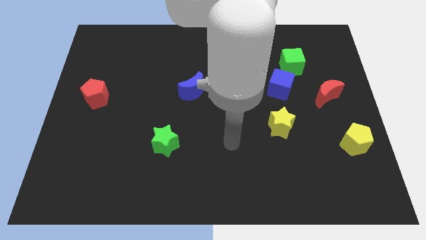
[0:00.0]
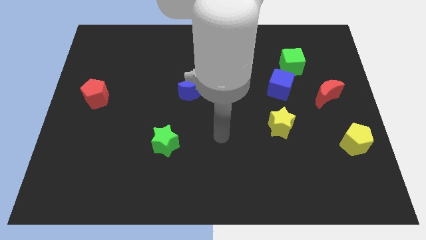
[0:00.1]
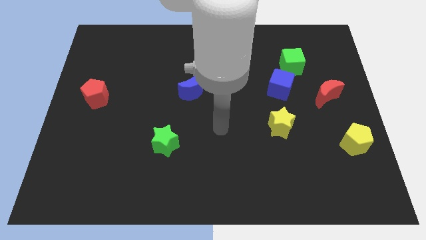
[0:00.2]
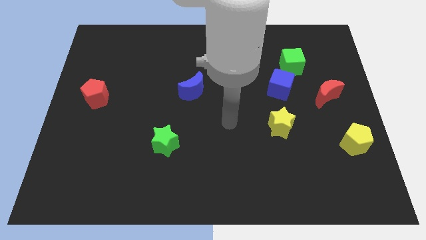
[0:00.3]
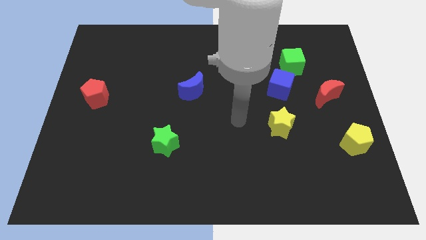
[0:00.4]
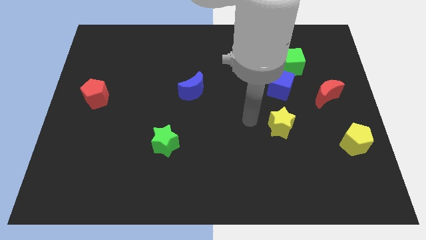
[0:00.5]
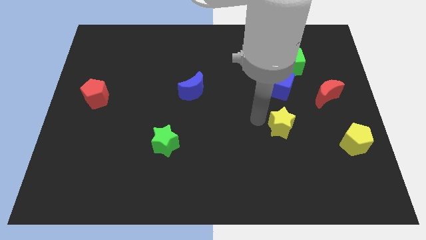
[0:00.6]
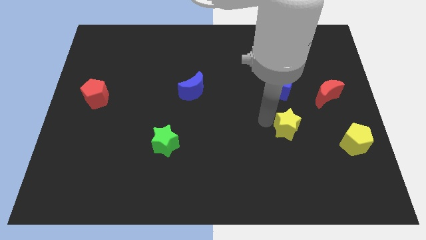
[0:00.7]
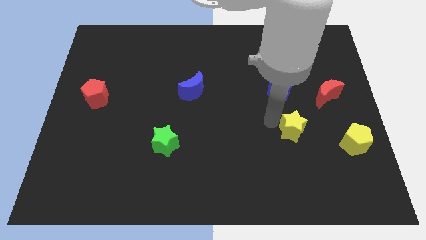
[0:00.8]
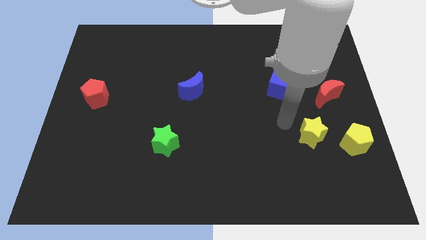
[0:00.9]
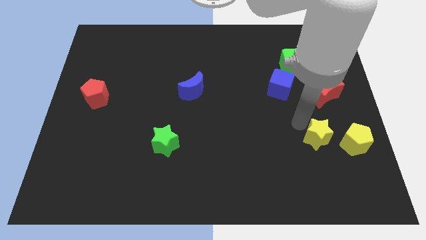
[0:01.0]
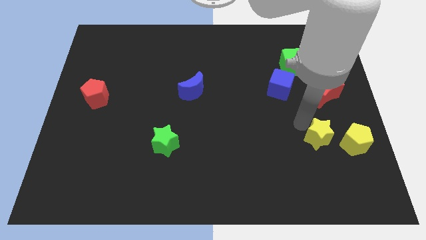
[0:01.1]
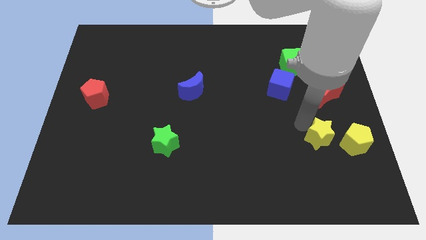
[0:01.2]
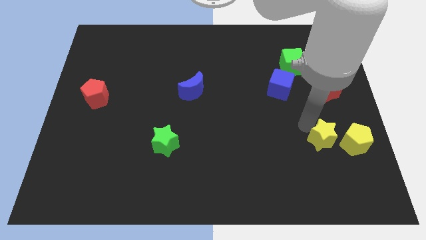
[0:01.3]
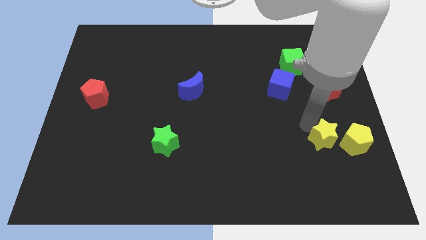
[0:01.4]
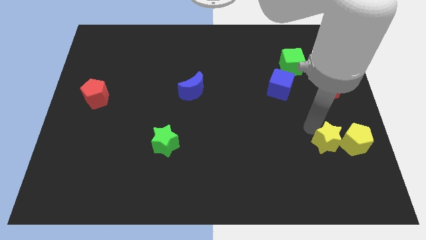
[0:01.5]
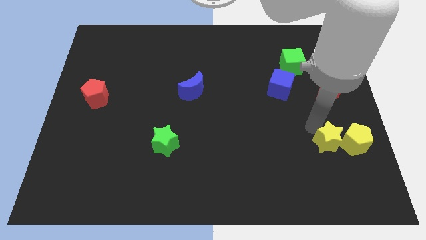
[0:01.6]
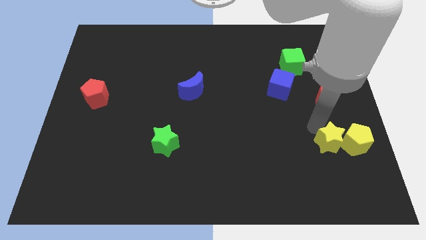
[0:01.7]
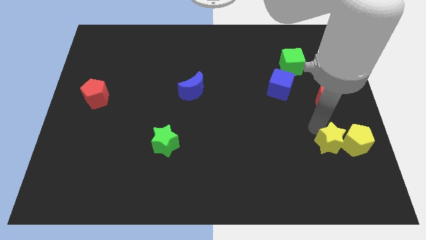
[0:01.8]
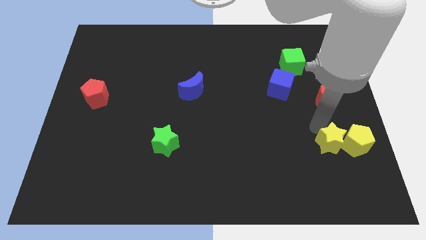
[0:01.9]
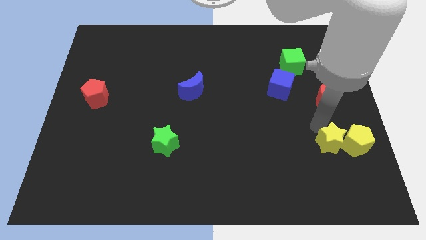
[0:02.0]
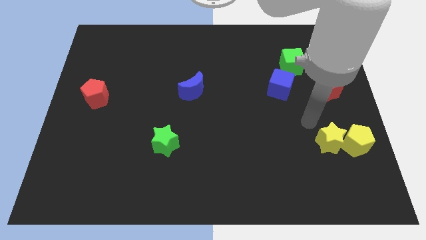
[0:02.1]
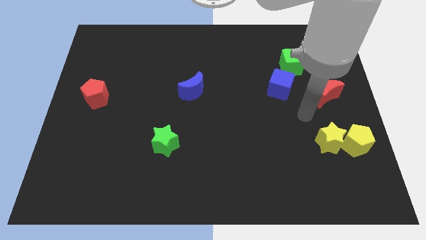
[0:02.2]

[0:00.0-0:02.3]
move the yellow star left to the yellow pentagon

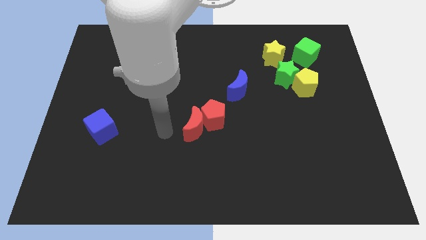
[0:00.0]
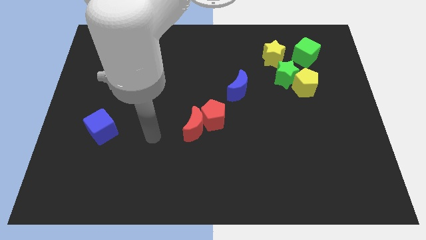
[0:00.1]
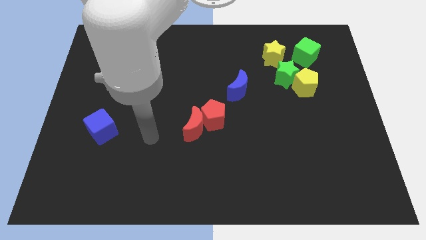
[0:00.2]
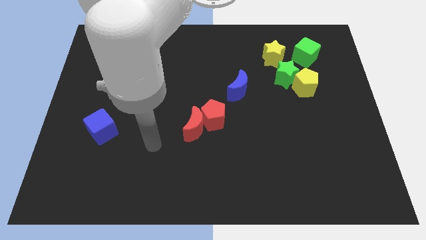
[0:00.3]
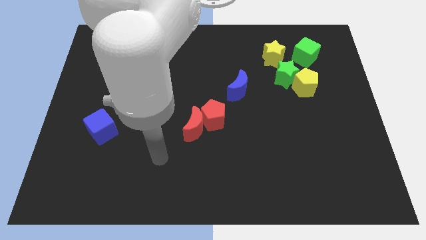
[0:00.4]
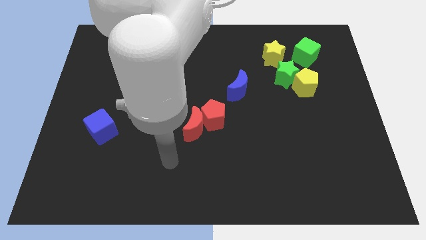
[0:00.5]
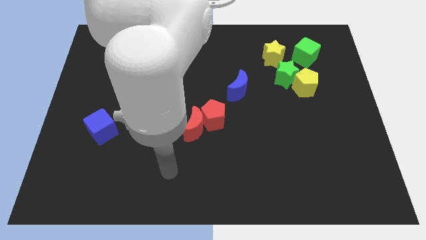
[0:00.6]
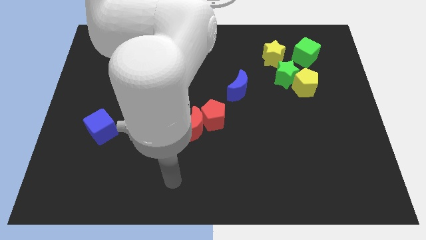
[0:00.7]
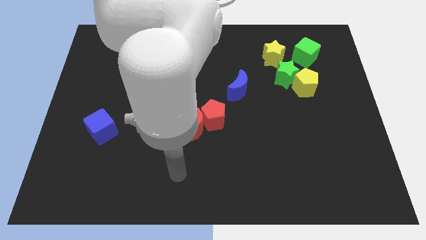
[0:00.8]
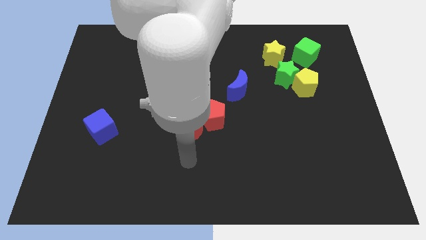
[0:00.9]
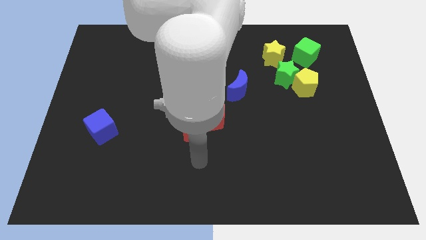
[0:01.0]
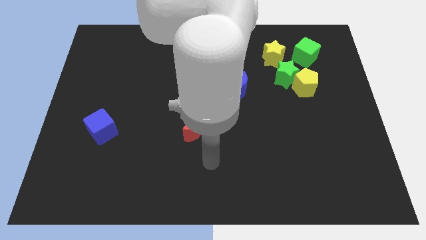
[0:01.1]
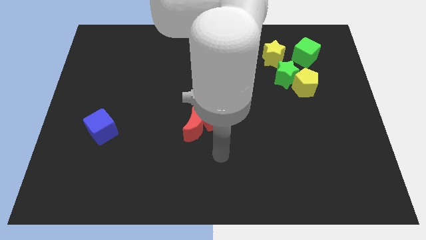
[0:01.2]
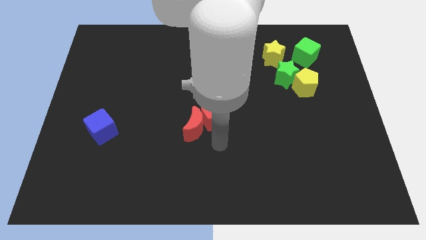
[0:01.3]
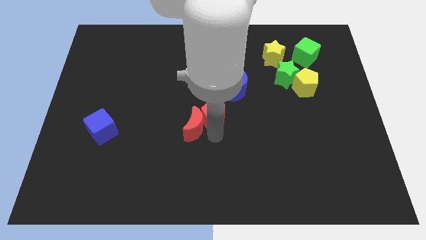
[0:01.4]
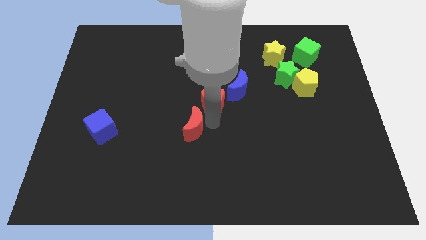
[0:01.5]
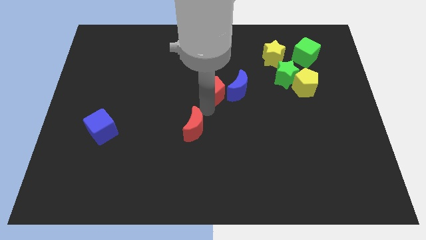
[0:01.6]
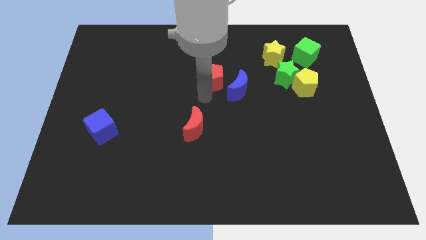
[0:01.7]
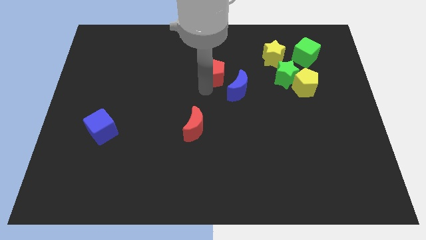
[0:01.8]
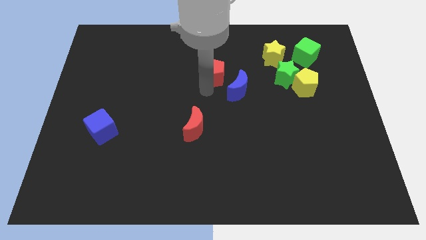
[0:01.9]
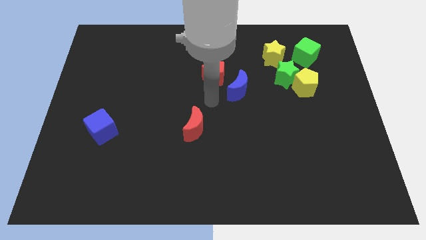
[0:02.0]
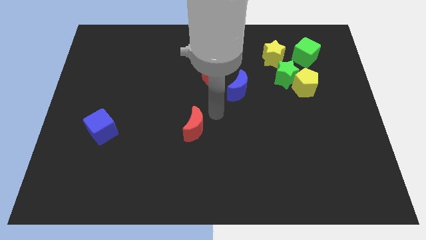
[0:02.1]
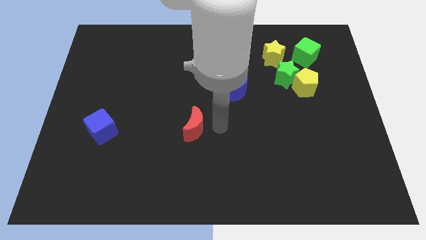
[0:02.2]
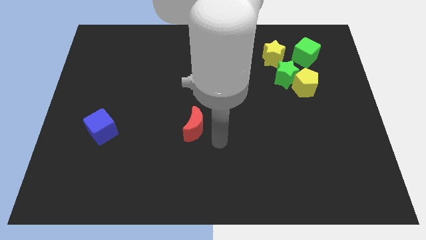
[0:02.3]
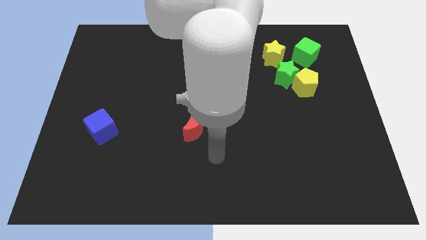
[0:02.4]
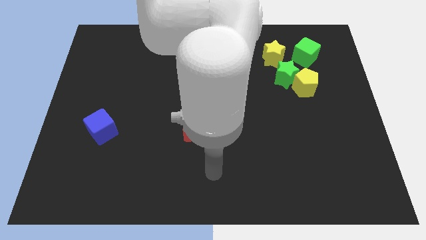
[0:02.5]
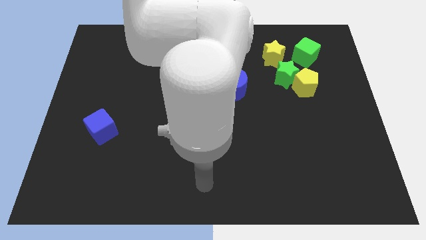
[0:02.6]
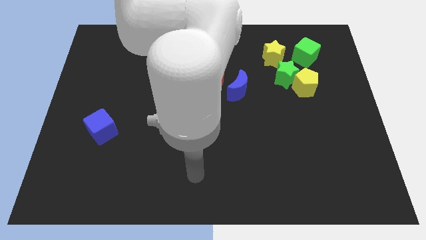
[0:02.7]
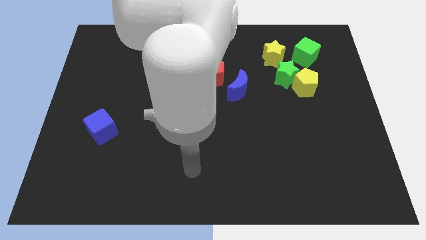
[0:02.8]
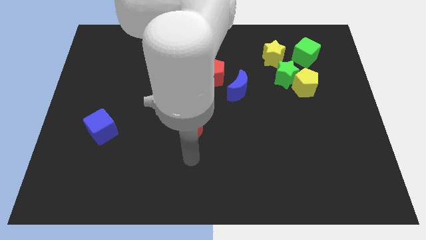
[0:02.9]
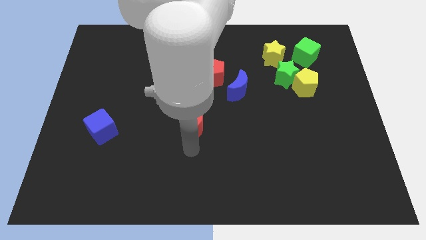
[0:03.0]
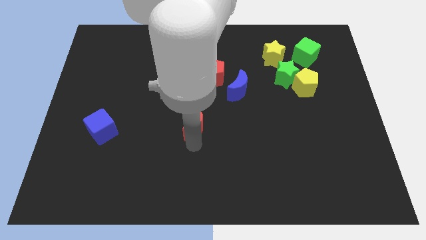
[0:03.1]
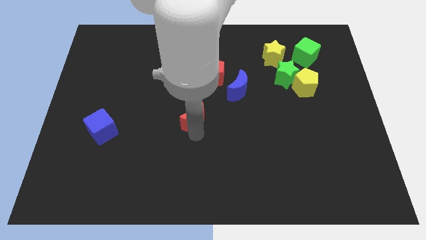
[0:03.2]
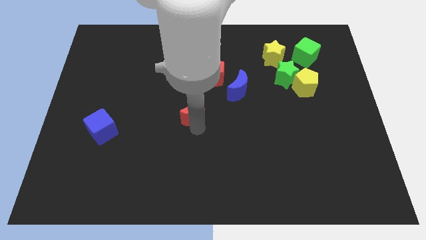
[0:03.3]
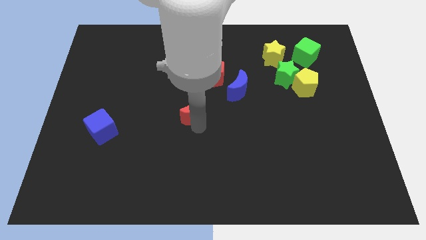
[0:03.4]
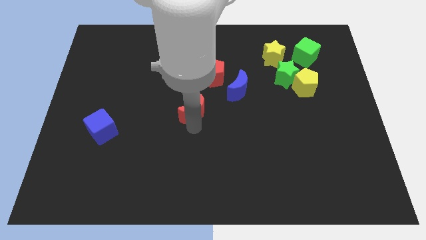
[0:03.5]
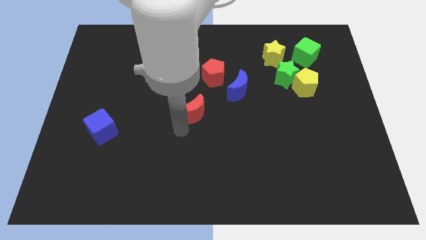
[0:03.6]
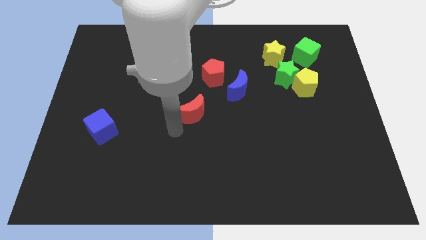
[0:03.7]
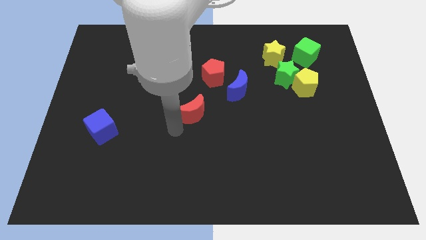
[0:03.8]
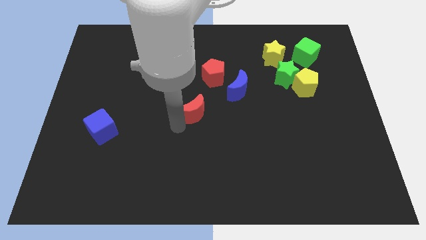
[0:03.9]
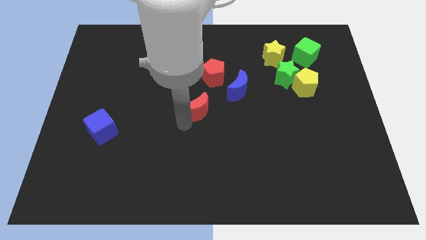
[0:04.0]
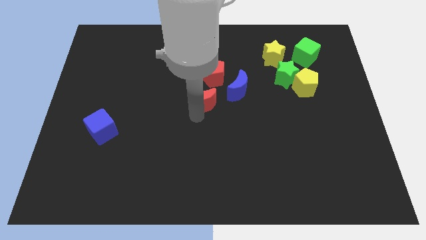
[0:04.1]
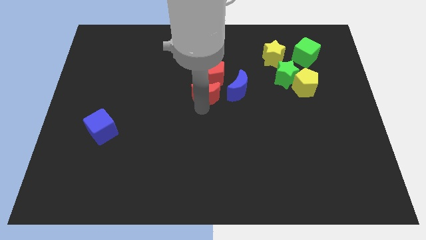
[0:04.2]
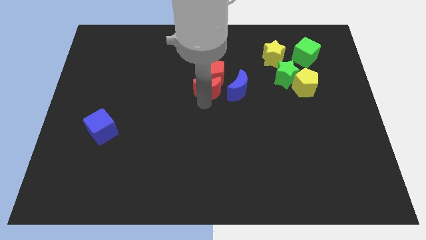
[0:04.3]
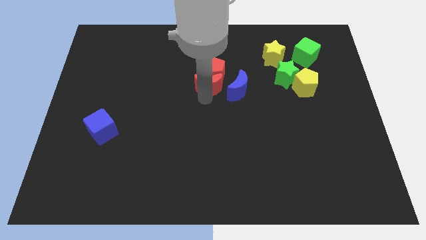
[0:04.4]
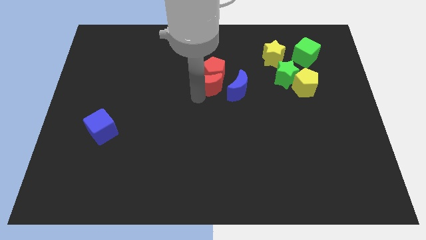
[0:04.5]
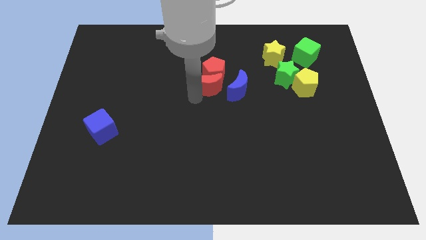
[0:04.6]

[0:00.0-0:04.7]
slide the red blocks to the left side of the blue moon

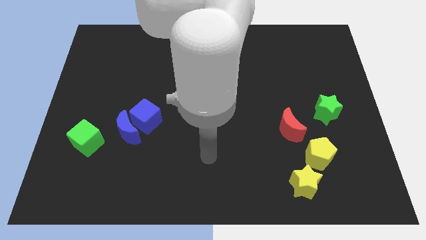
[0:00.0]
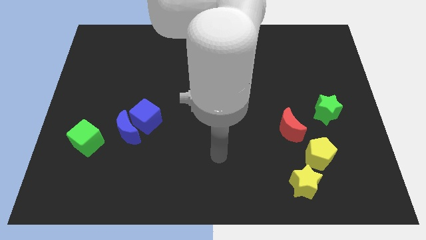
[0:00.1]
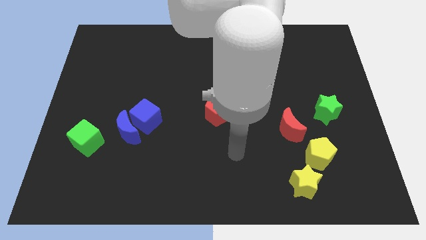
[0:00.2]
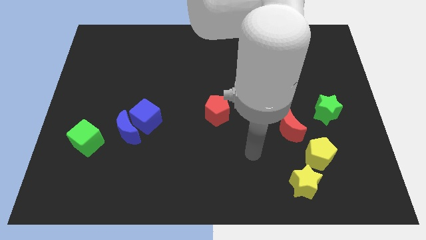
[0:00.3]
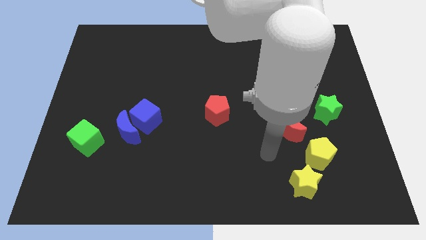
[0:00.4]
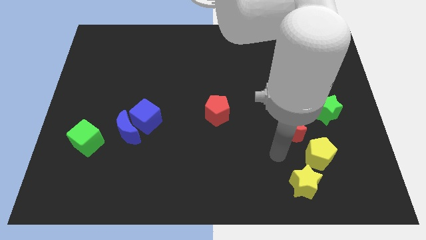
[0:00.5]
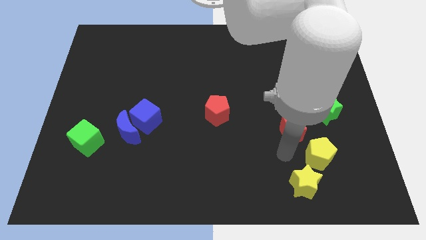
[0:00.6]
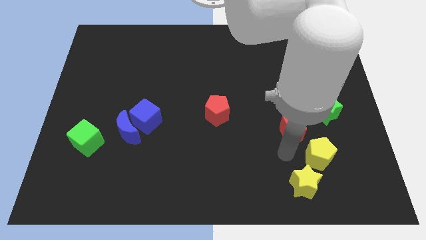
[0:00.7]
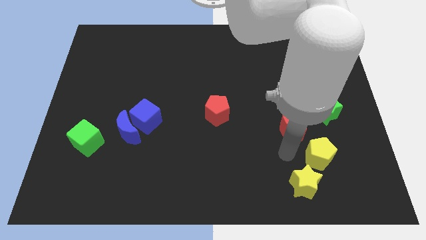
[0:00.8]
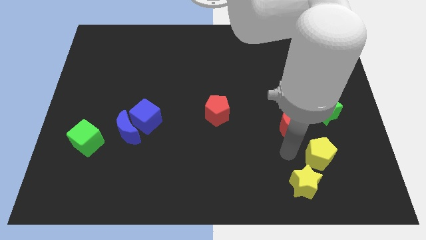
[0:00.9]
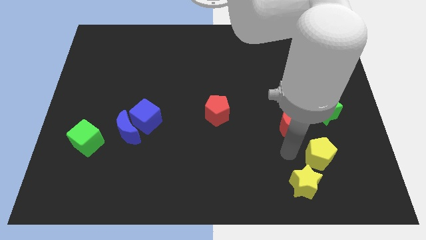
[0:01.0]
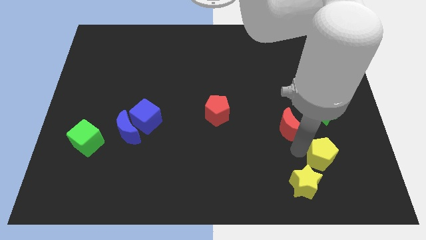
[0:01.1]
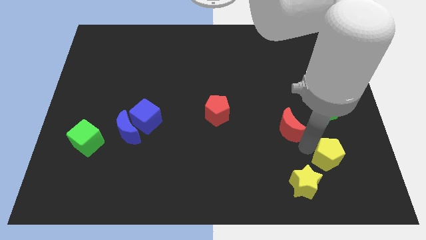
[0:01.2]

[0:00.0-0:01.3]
push the yellow pentagon slightly to right

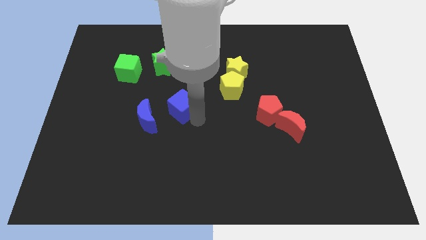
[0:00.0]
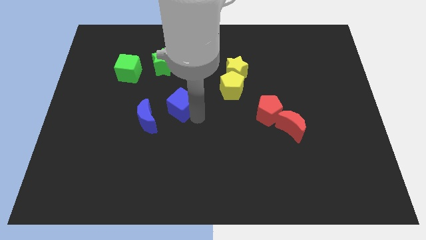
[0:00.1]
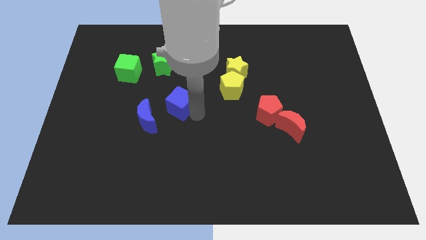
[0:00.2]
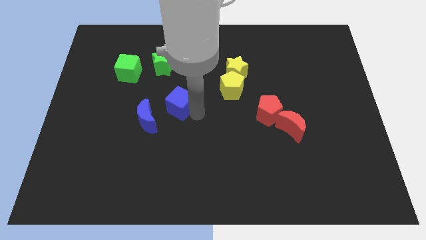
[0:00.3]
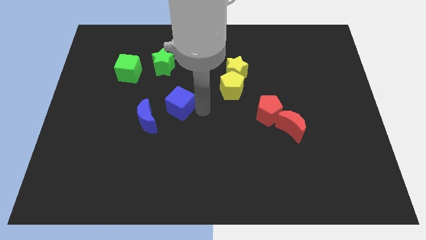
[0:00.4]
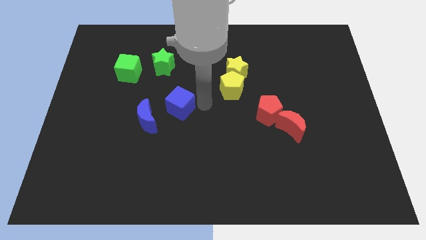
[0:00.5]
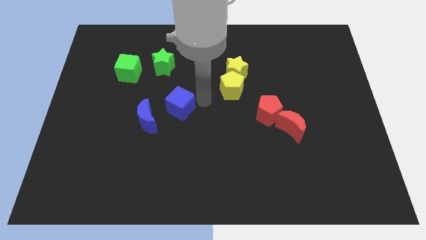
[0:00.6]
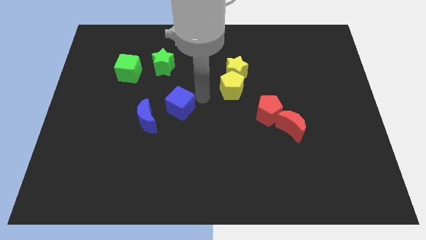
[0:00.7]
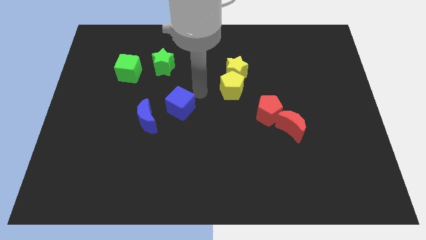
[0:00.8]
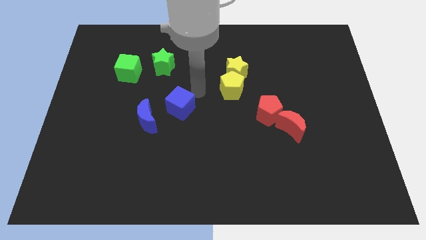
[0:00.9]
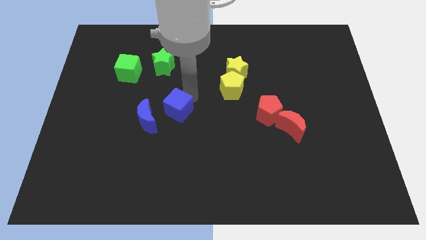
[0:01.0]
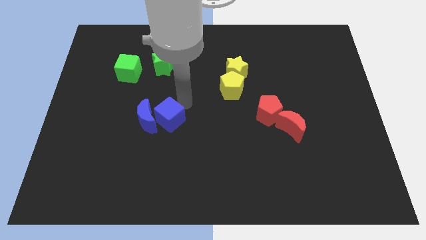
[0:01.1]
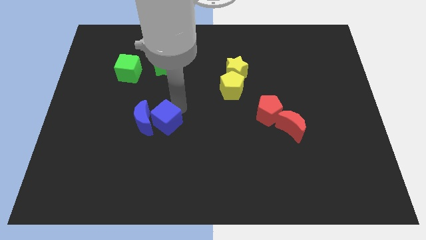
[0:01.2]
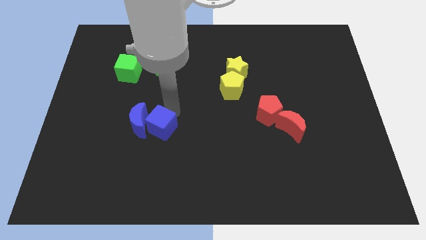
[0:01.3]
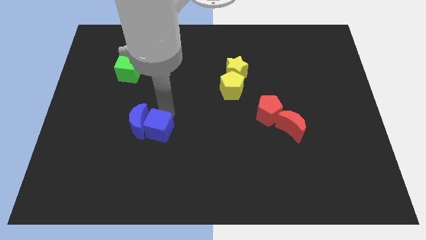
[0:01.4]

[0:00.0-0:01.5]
push the blue cube into the blue moon
